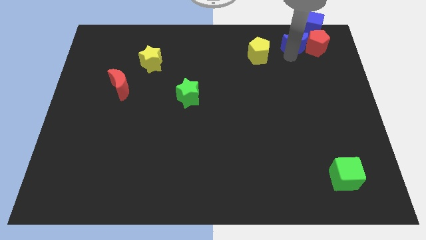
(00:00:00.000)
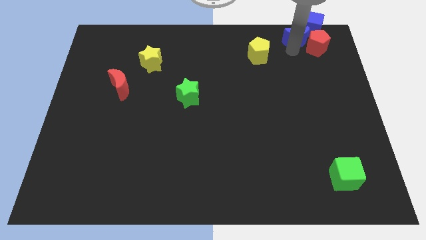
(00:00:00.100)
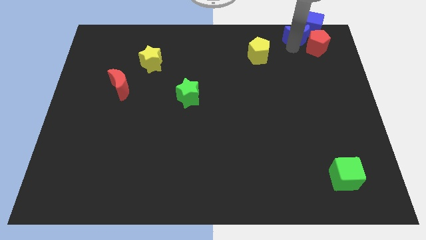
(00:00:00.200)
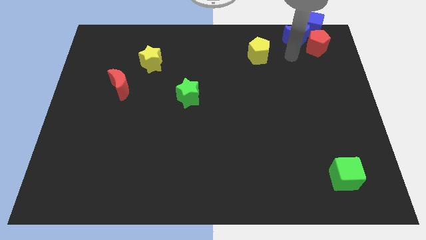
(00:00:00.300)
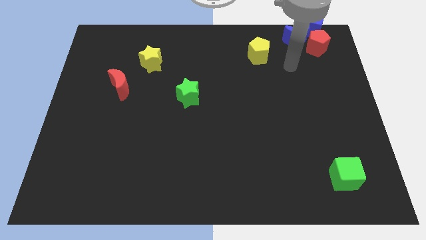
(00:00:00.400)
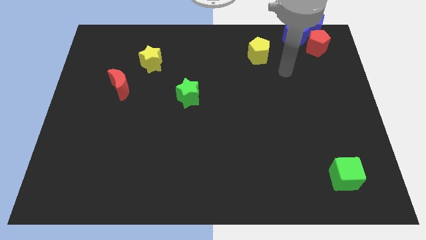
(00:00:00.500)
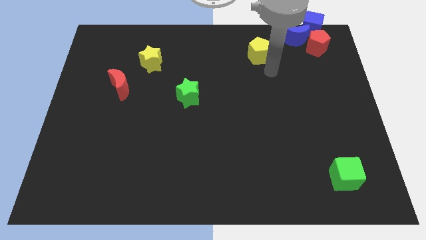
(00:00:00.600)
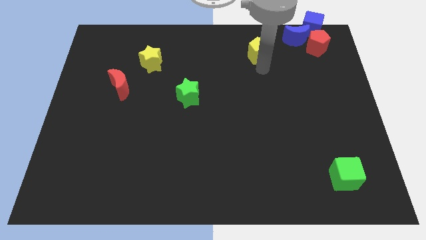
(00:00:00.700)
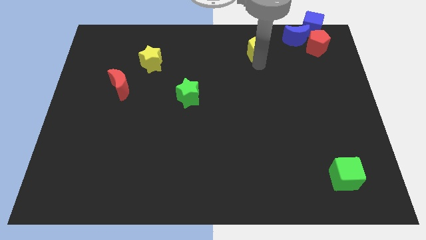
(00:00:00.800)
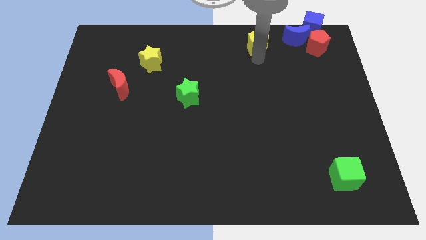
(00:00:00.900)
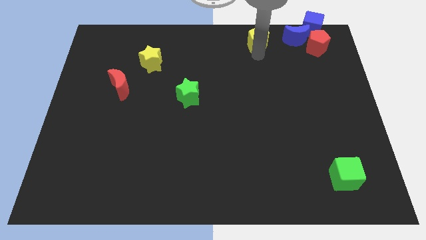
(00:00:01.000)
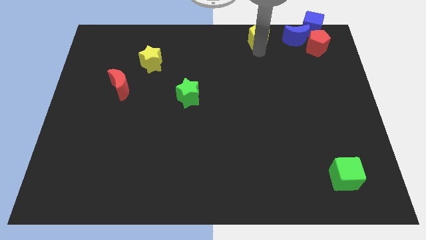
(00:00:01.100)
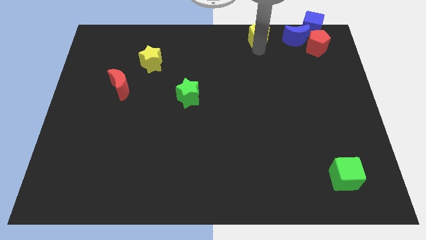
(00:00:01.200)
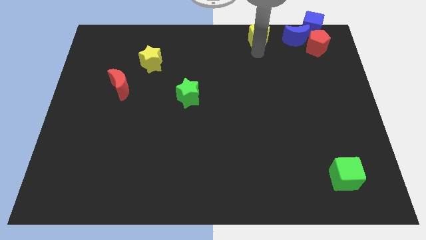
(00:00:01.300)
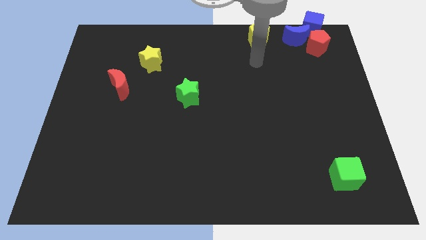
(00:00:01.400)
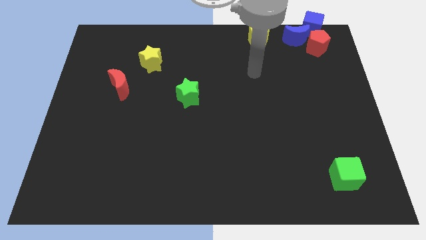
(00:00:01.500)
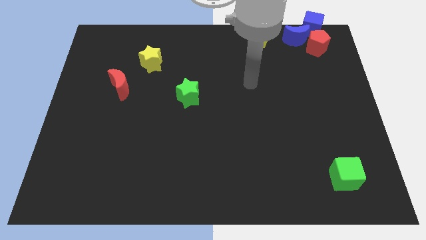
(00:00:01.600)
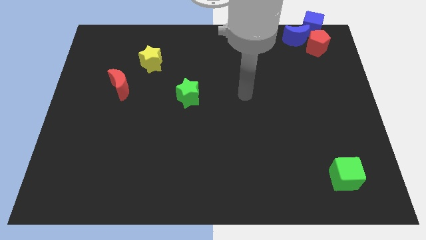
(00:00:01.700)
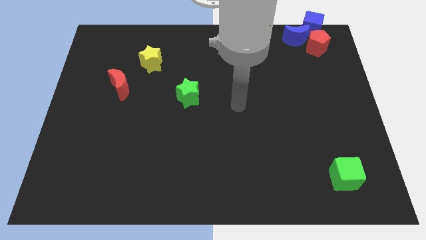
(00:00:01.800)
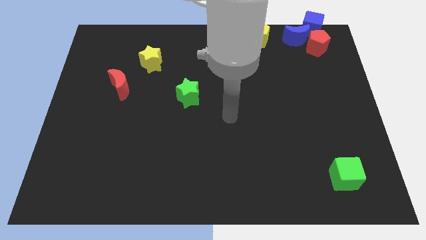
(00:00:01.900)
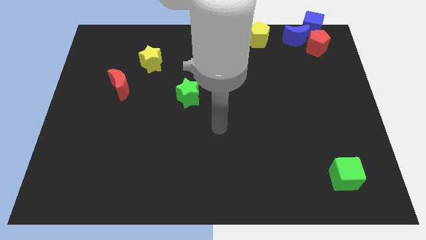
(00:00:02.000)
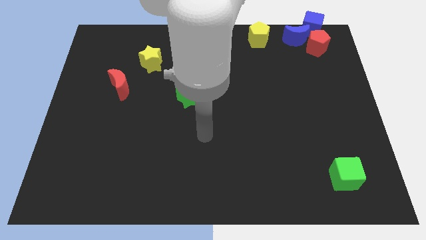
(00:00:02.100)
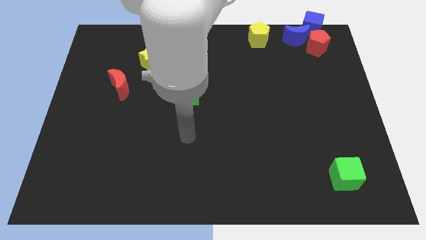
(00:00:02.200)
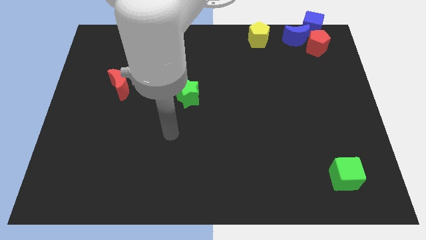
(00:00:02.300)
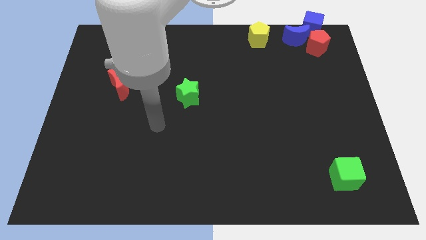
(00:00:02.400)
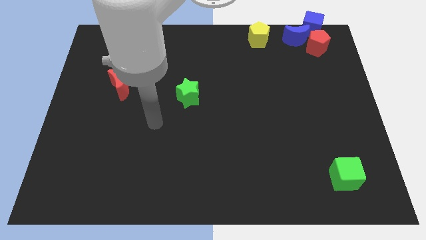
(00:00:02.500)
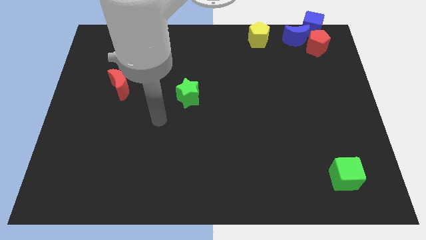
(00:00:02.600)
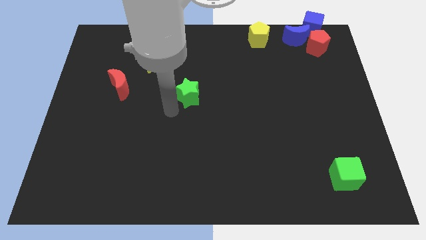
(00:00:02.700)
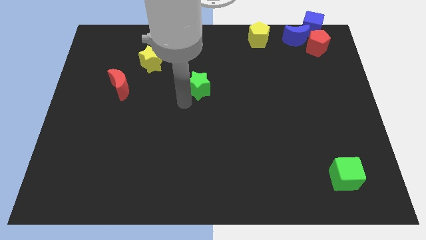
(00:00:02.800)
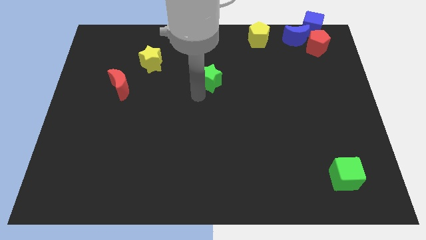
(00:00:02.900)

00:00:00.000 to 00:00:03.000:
place yellow pentagon beside blue crescent

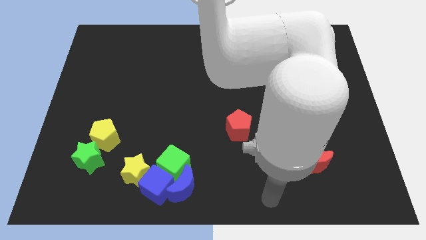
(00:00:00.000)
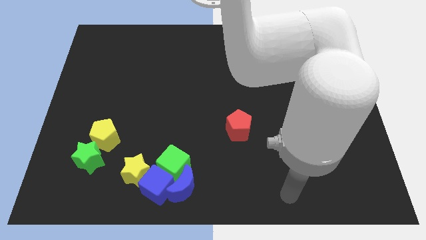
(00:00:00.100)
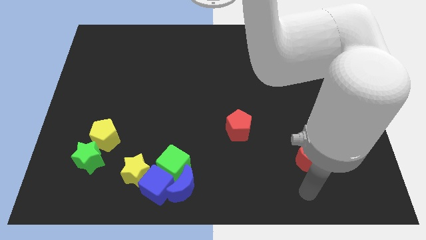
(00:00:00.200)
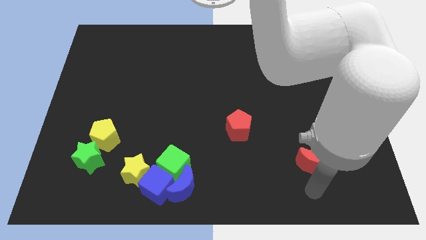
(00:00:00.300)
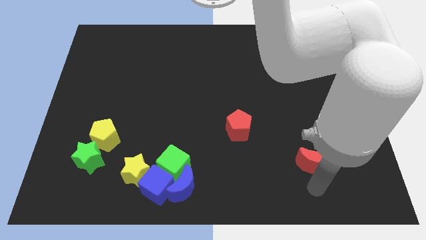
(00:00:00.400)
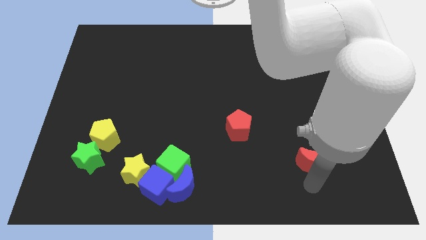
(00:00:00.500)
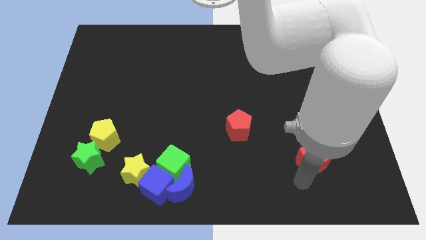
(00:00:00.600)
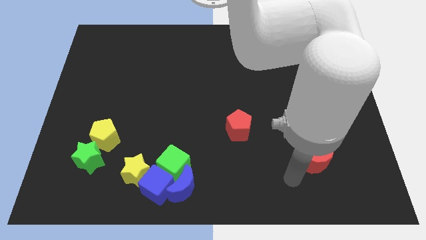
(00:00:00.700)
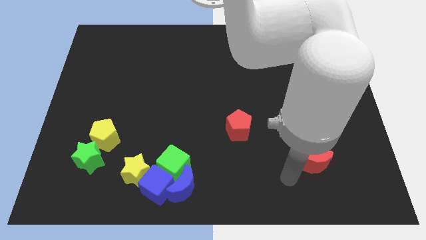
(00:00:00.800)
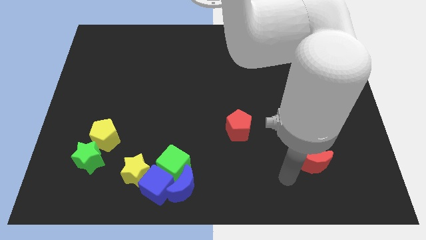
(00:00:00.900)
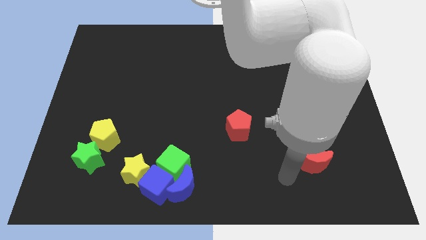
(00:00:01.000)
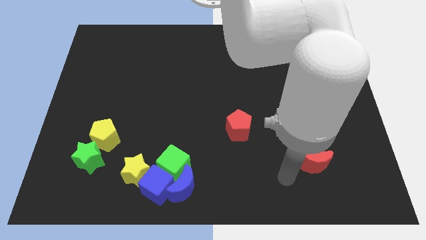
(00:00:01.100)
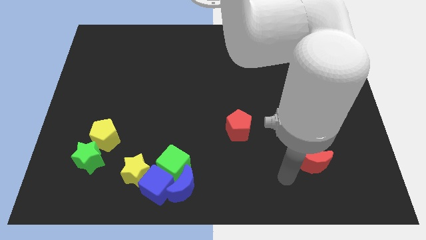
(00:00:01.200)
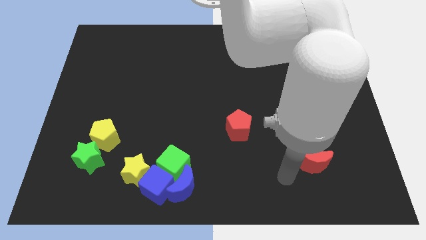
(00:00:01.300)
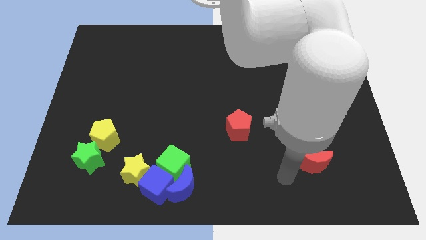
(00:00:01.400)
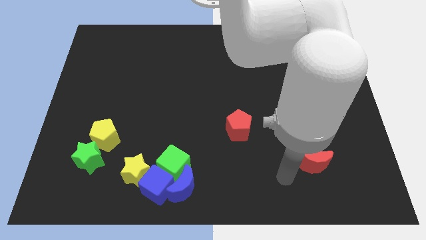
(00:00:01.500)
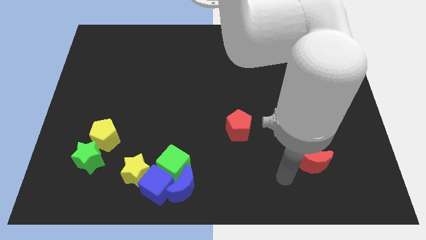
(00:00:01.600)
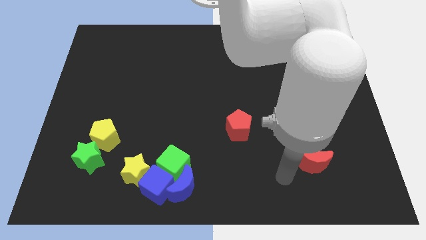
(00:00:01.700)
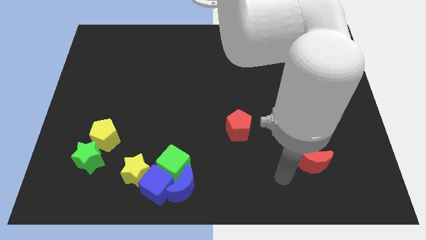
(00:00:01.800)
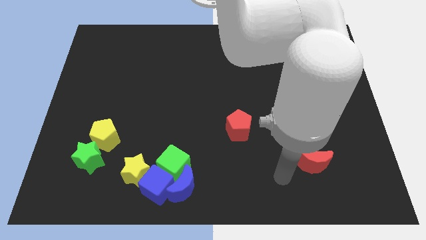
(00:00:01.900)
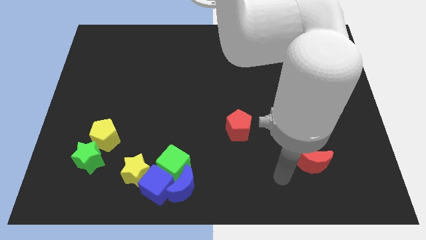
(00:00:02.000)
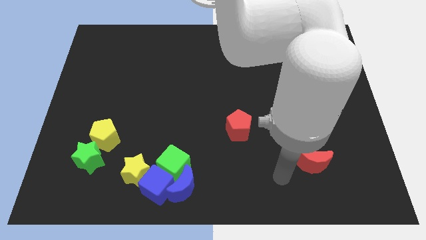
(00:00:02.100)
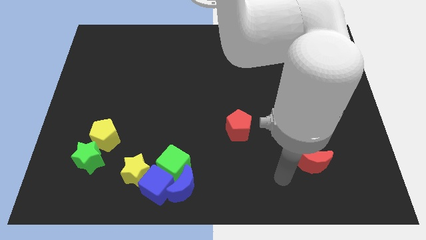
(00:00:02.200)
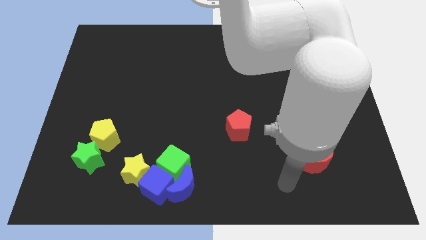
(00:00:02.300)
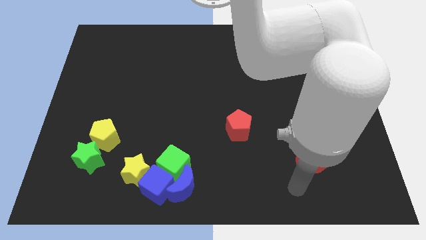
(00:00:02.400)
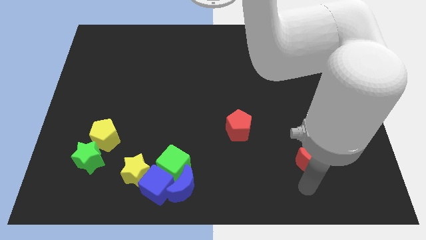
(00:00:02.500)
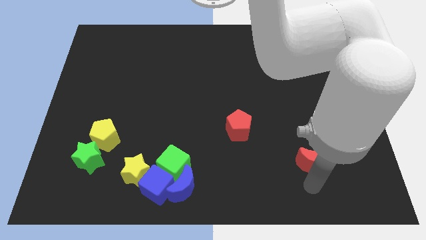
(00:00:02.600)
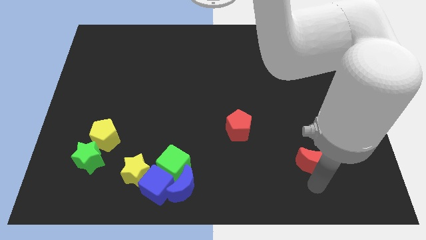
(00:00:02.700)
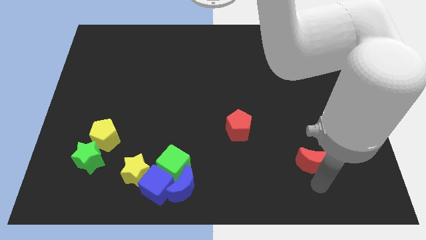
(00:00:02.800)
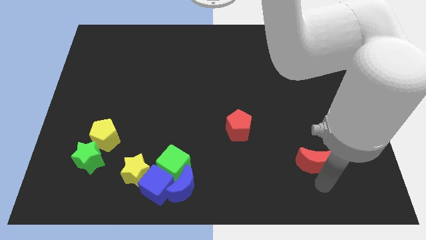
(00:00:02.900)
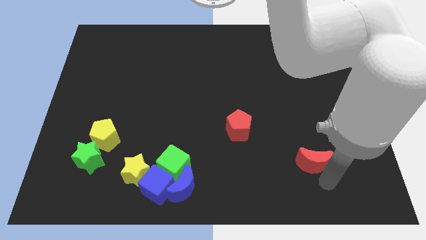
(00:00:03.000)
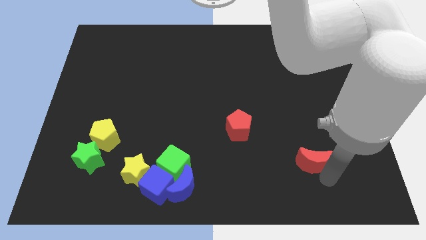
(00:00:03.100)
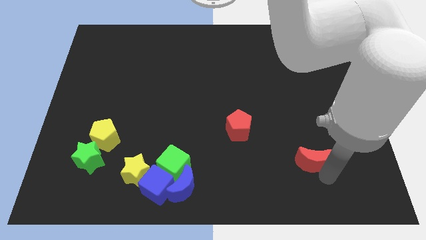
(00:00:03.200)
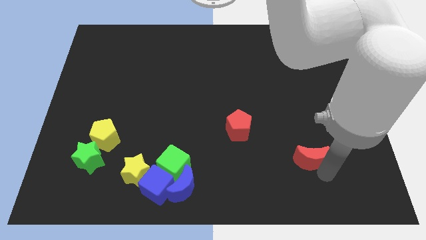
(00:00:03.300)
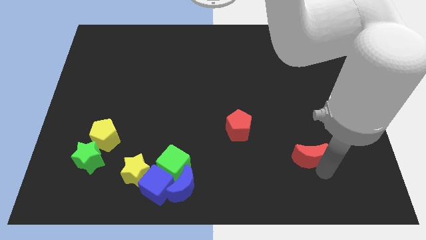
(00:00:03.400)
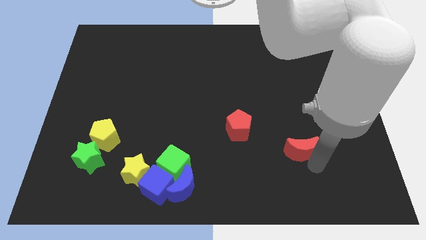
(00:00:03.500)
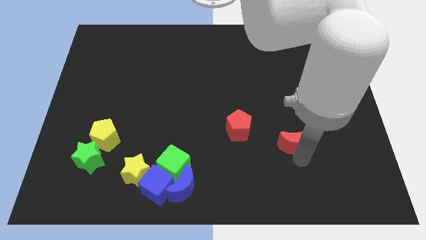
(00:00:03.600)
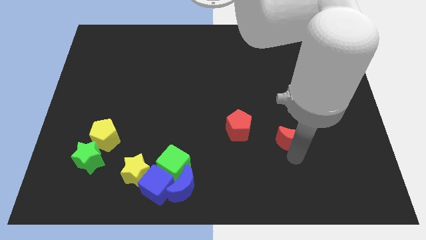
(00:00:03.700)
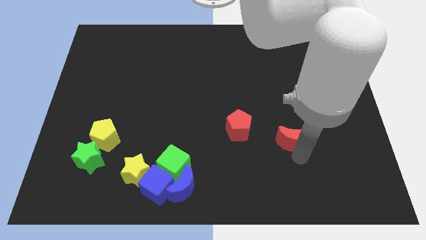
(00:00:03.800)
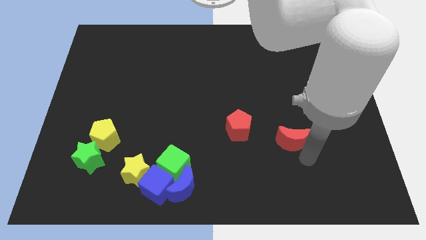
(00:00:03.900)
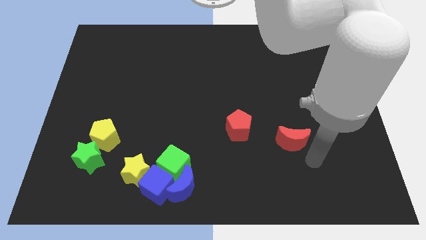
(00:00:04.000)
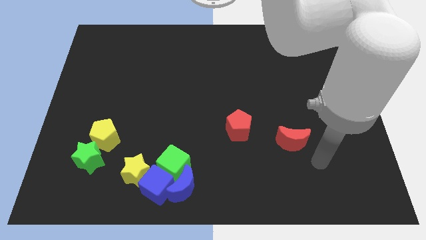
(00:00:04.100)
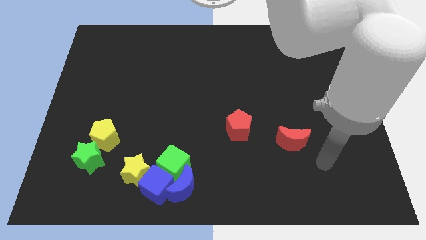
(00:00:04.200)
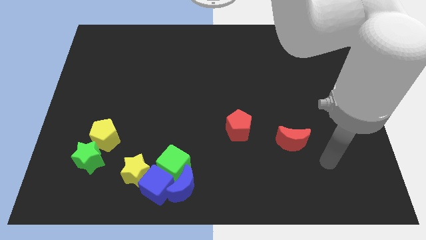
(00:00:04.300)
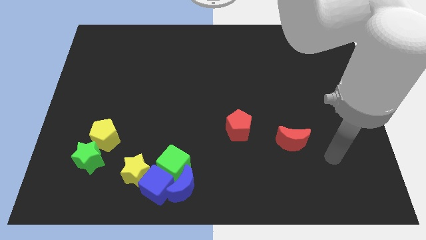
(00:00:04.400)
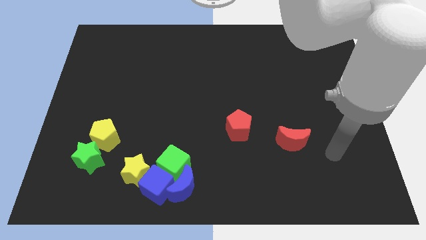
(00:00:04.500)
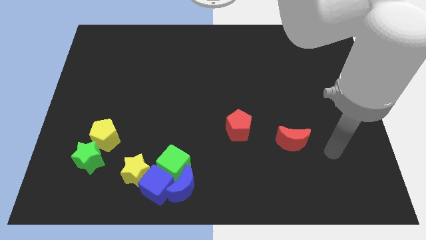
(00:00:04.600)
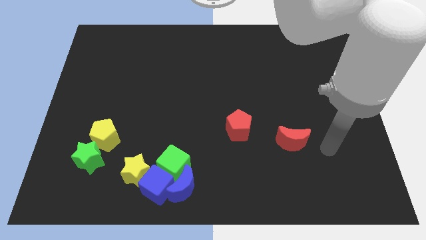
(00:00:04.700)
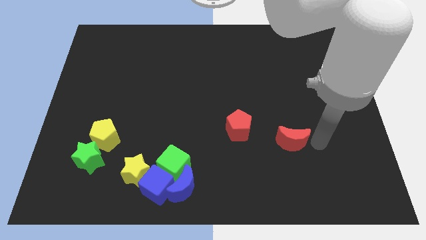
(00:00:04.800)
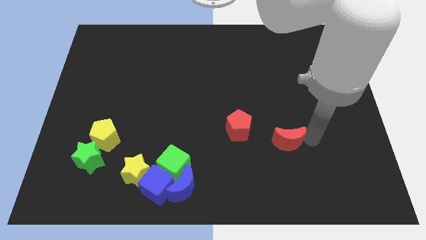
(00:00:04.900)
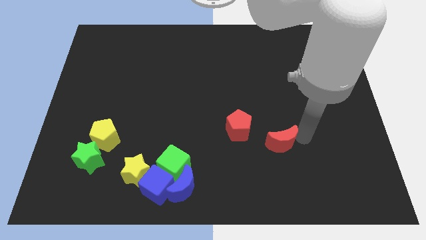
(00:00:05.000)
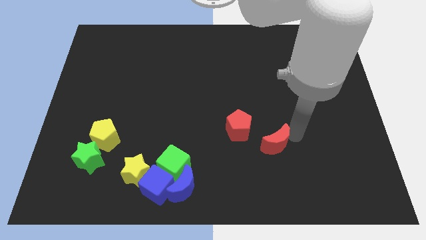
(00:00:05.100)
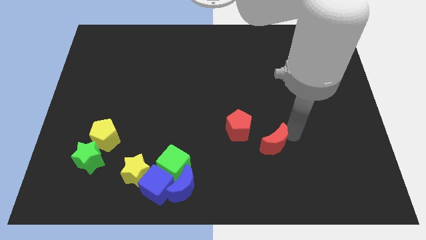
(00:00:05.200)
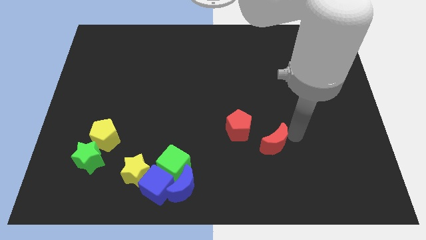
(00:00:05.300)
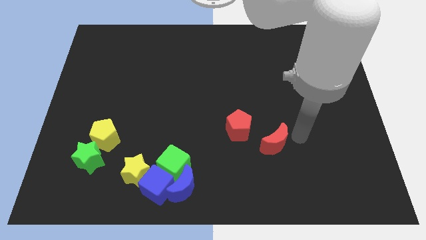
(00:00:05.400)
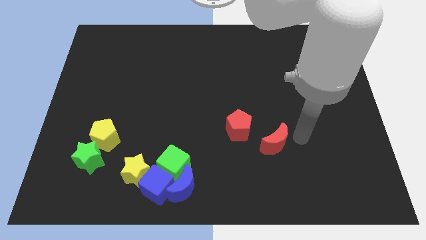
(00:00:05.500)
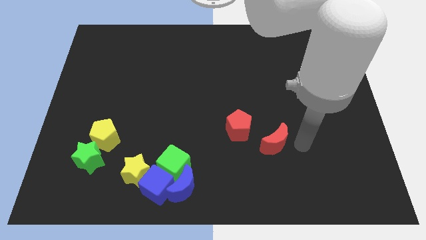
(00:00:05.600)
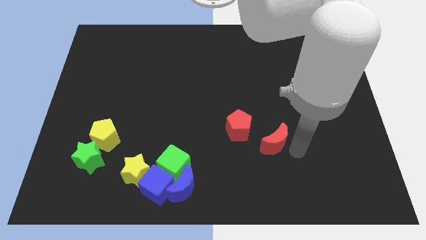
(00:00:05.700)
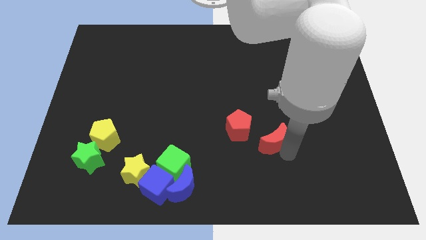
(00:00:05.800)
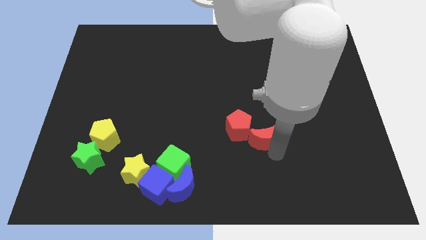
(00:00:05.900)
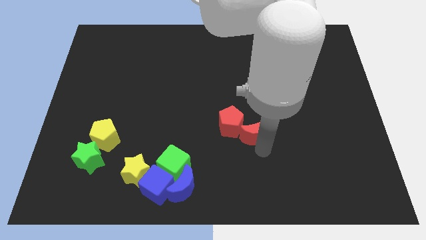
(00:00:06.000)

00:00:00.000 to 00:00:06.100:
push the red moon to the right side of the red pentagon
